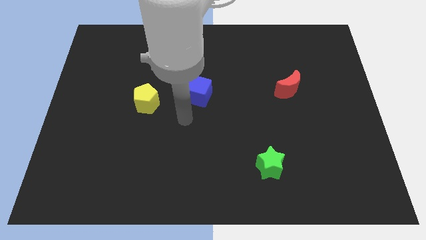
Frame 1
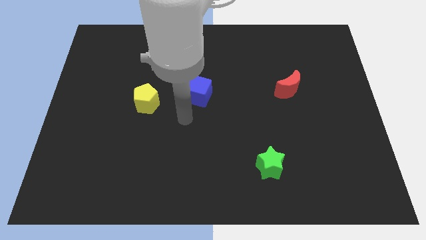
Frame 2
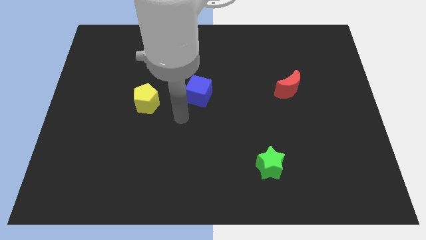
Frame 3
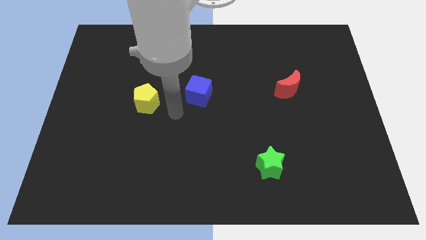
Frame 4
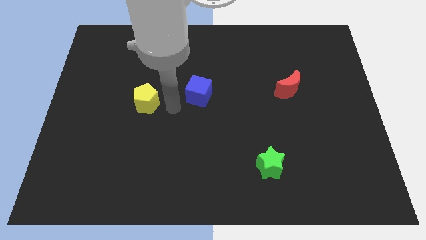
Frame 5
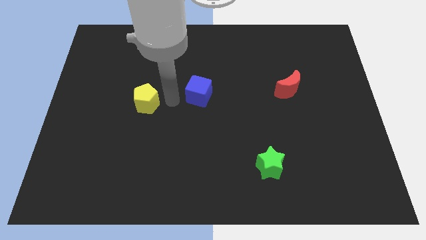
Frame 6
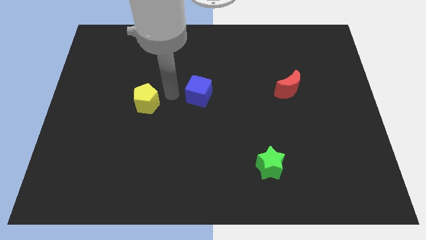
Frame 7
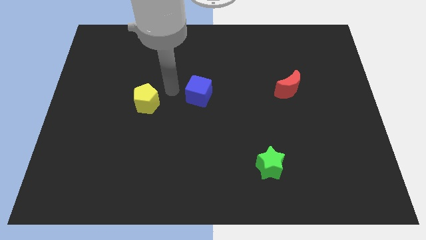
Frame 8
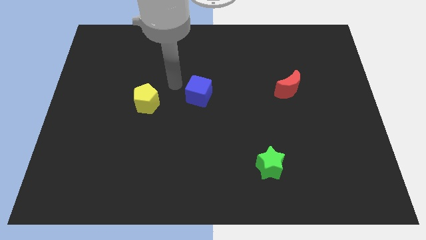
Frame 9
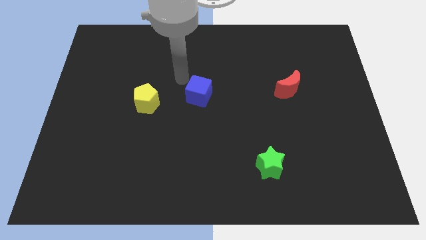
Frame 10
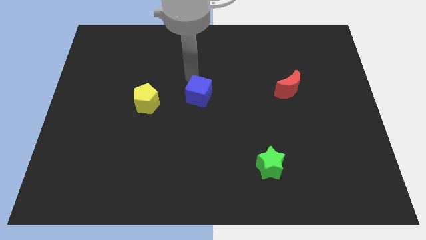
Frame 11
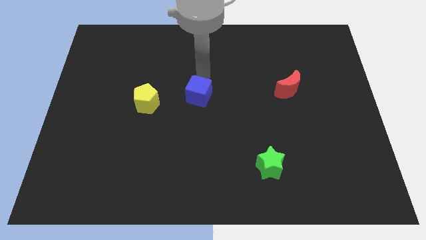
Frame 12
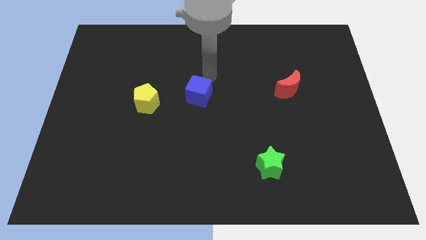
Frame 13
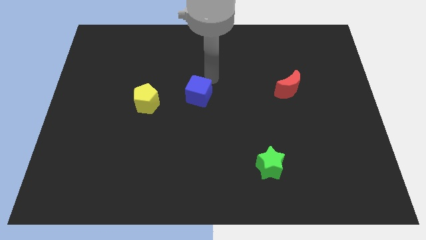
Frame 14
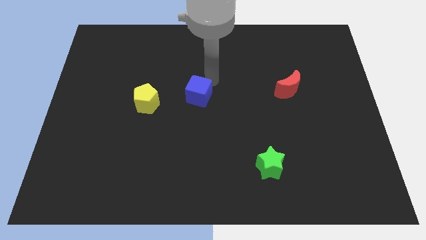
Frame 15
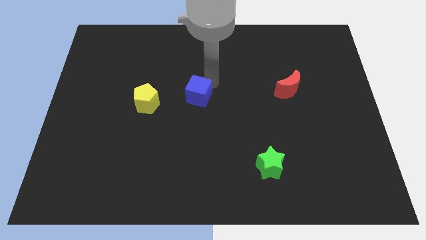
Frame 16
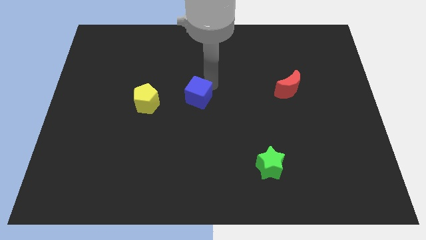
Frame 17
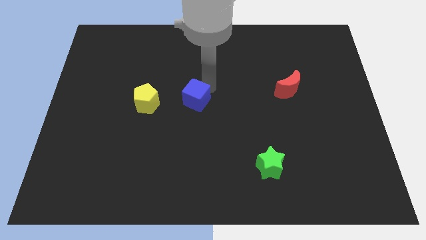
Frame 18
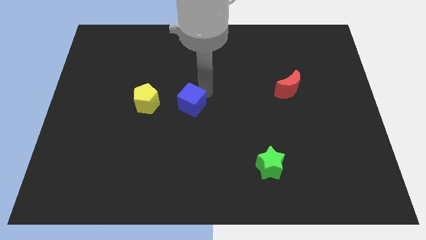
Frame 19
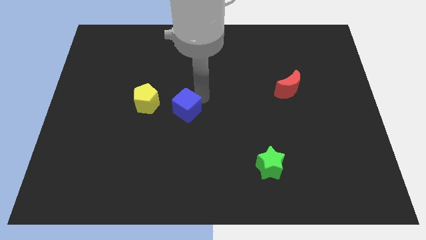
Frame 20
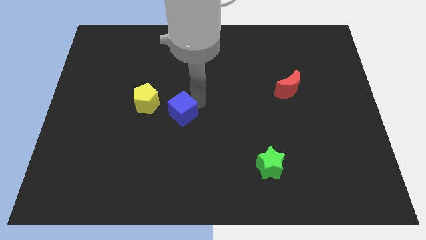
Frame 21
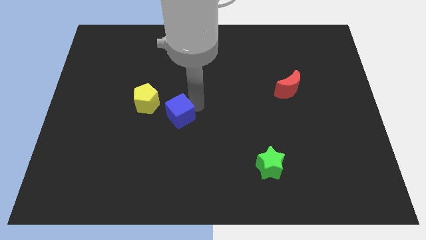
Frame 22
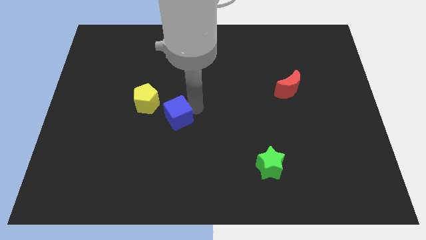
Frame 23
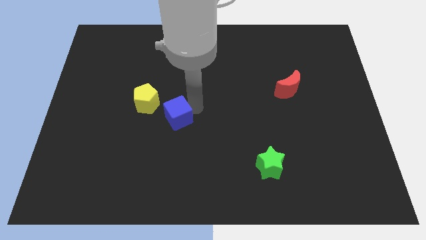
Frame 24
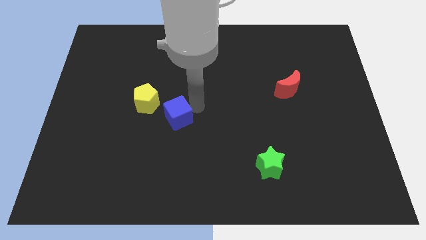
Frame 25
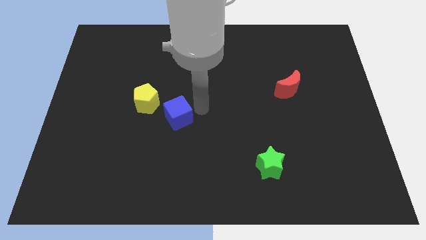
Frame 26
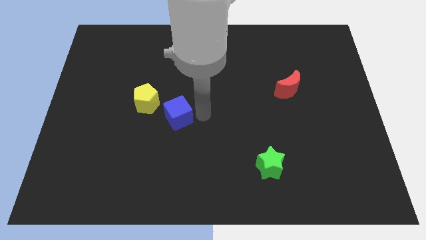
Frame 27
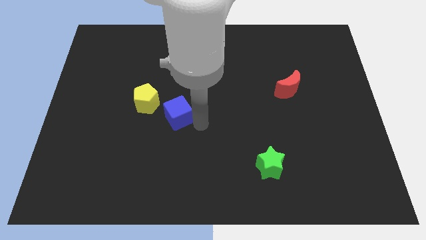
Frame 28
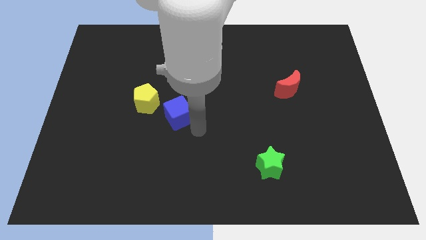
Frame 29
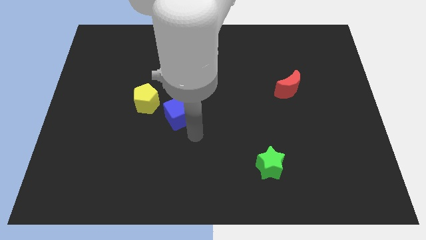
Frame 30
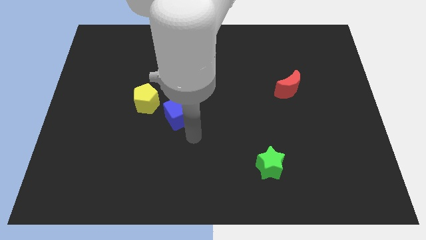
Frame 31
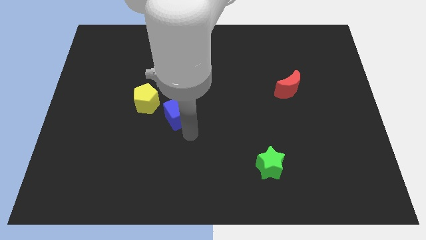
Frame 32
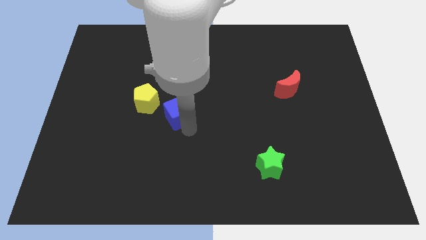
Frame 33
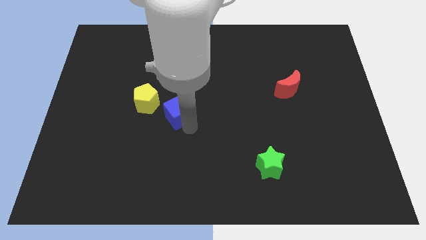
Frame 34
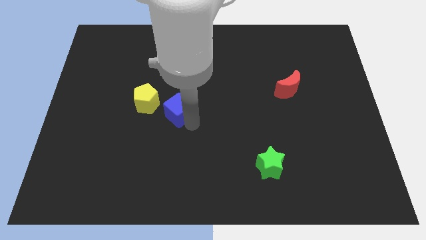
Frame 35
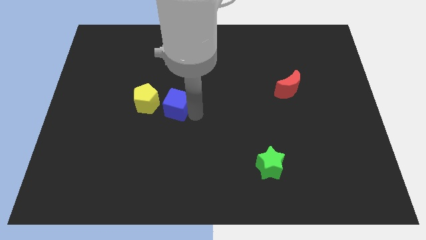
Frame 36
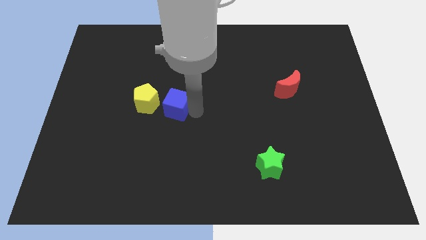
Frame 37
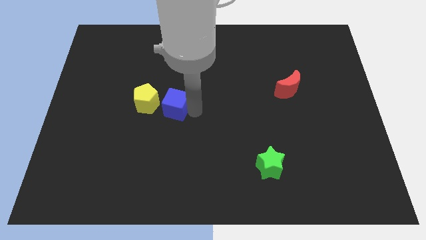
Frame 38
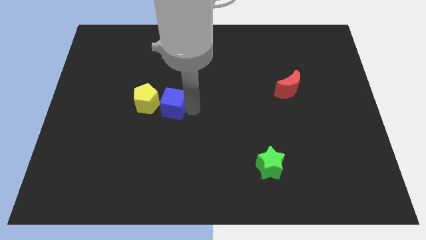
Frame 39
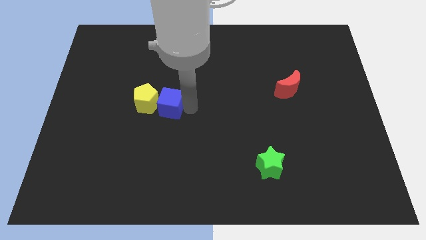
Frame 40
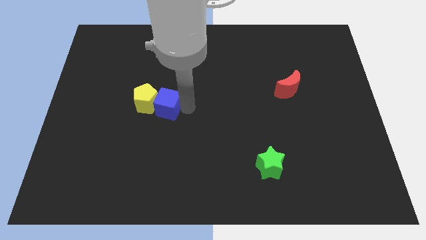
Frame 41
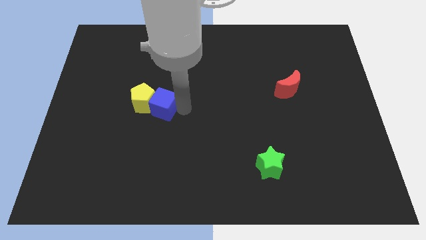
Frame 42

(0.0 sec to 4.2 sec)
put the blue block next to the yellow pentagon

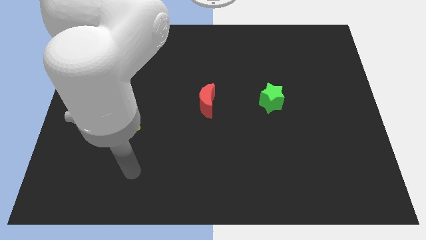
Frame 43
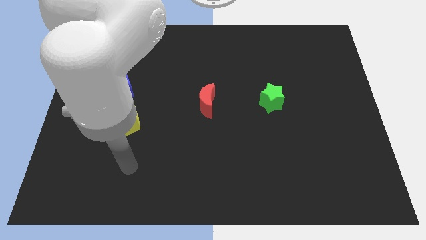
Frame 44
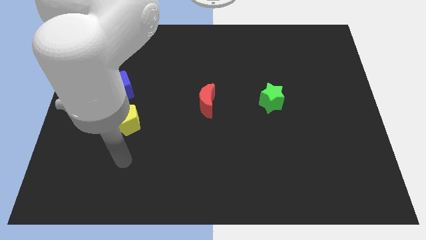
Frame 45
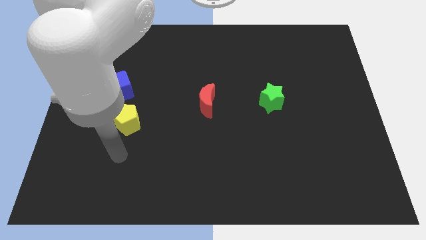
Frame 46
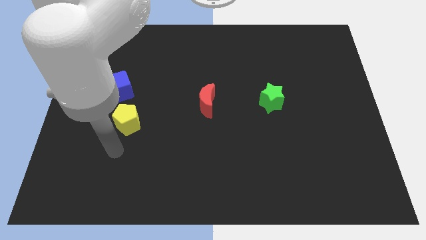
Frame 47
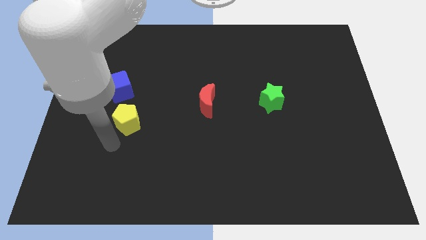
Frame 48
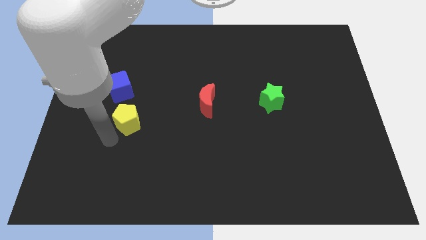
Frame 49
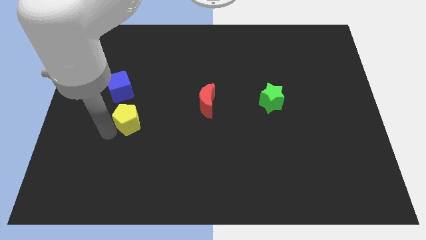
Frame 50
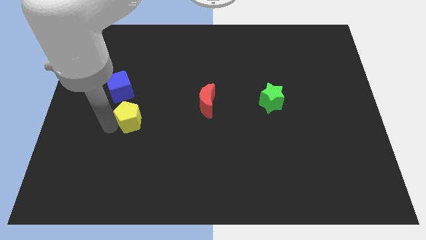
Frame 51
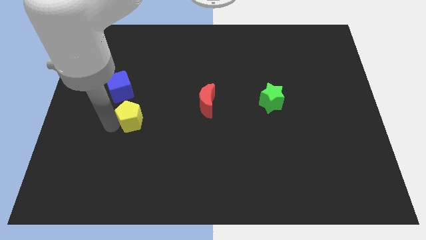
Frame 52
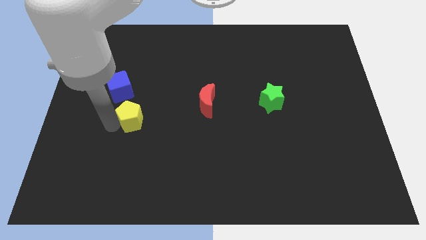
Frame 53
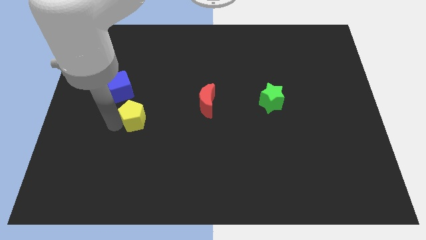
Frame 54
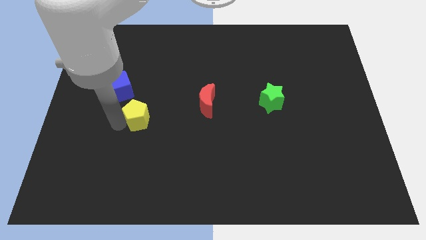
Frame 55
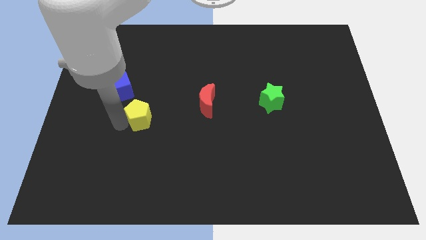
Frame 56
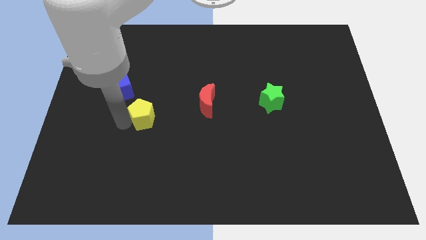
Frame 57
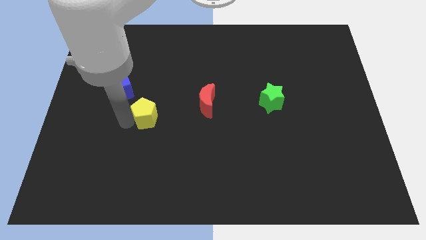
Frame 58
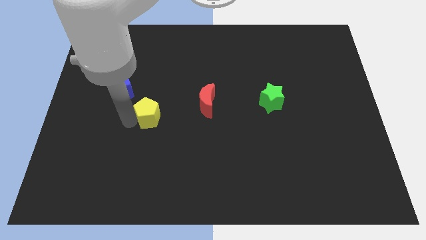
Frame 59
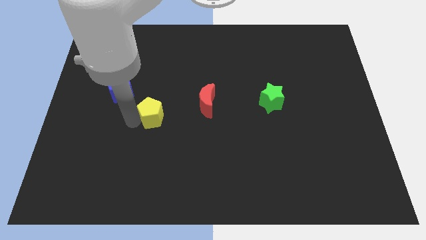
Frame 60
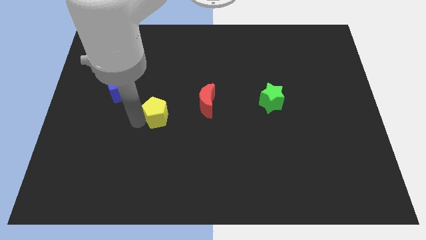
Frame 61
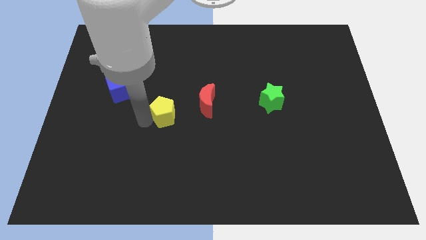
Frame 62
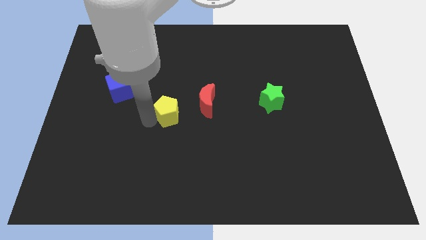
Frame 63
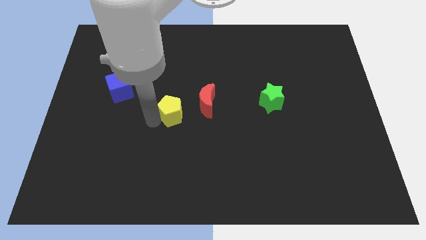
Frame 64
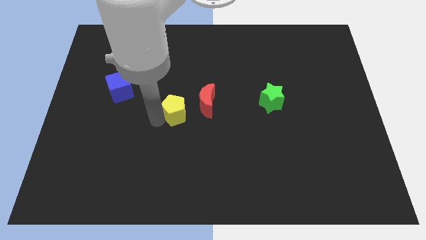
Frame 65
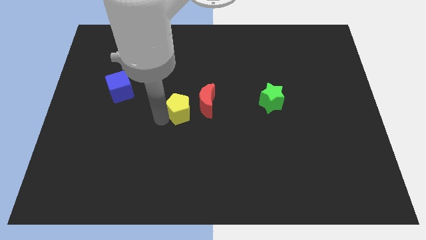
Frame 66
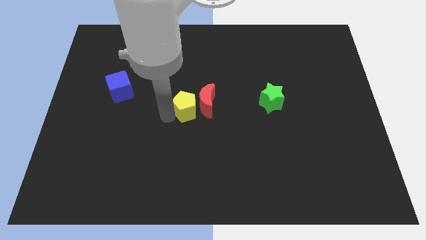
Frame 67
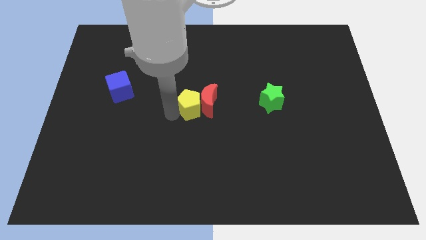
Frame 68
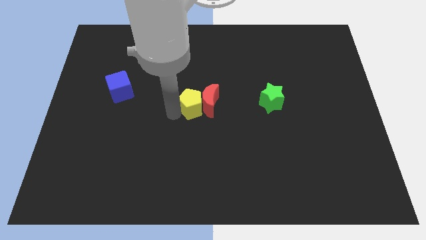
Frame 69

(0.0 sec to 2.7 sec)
put the yellow pentagon close to the red block

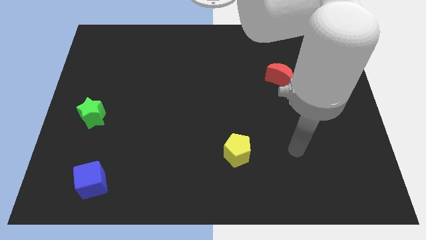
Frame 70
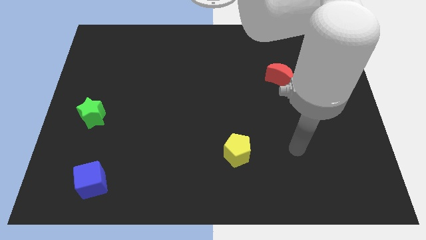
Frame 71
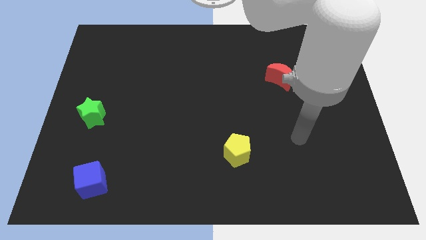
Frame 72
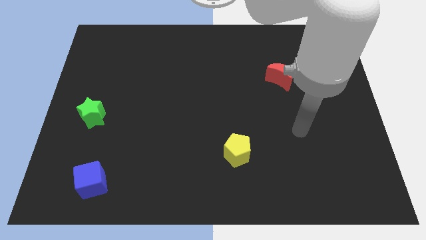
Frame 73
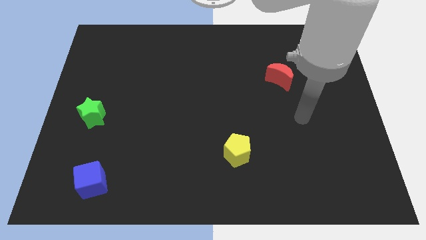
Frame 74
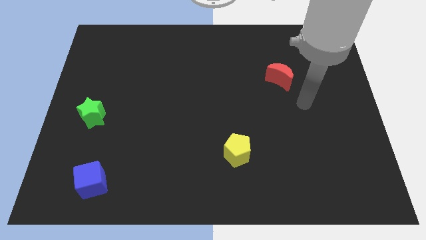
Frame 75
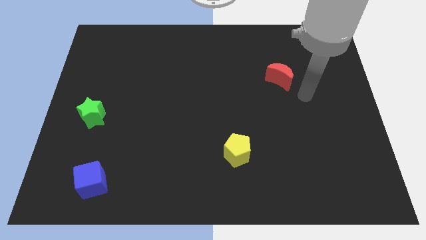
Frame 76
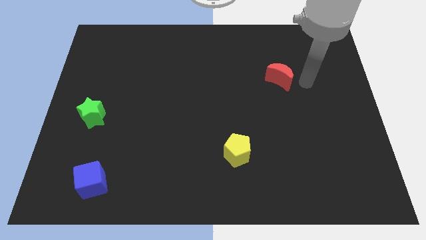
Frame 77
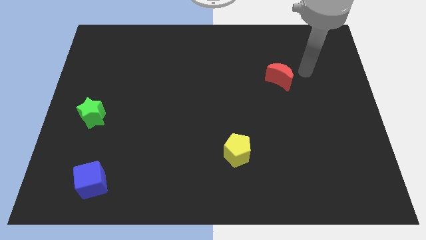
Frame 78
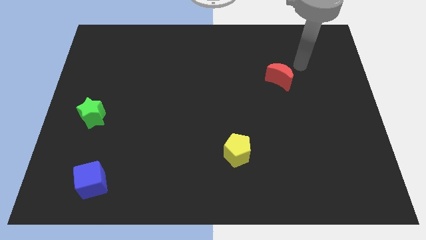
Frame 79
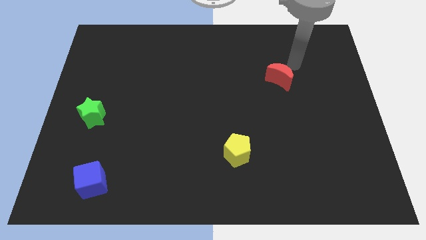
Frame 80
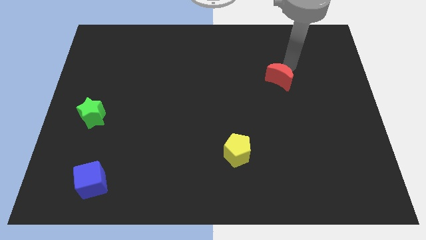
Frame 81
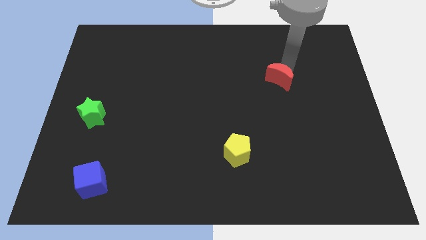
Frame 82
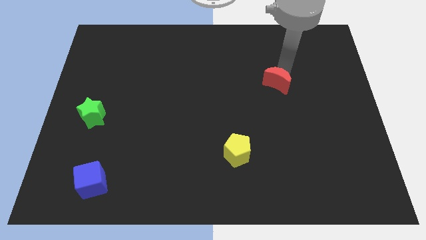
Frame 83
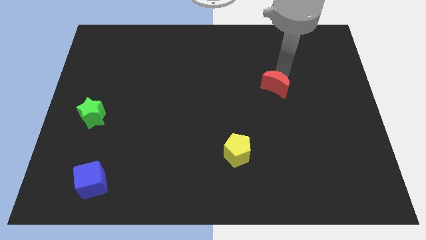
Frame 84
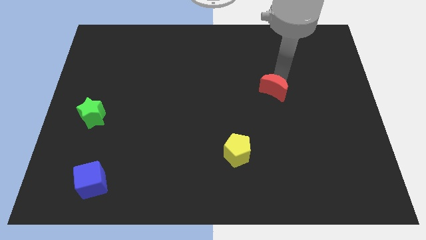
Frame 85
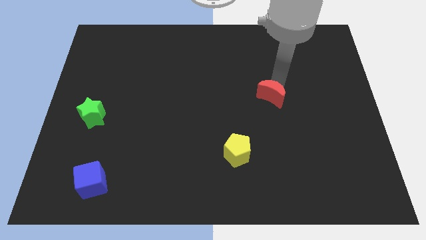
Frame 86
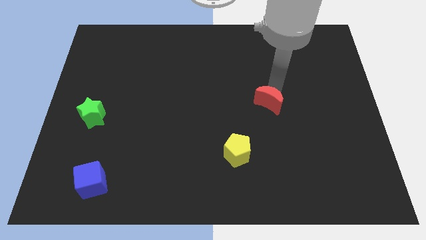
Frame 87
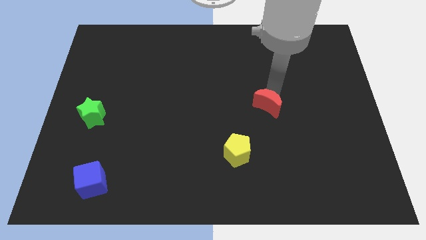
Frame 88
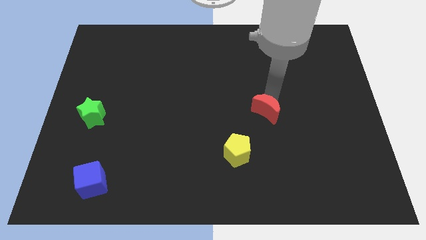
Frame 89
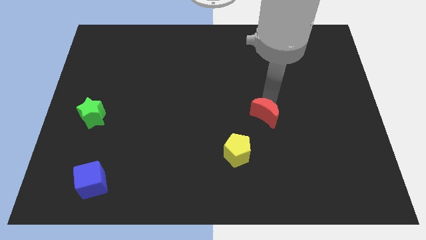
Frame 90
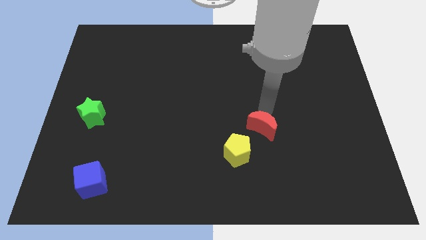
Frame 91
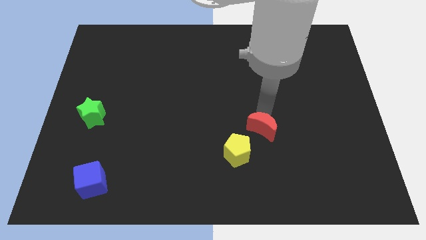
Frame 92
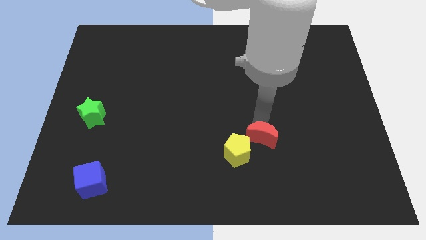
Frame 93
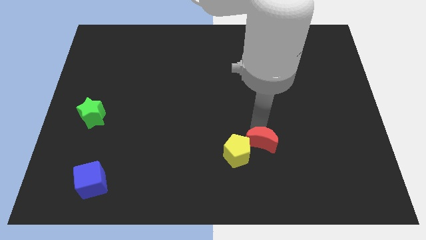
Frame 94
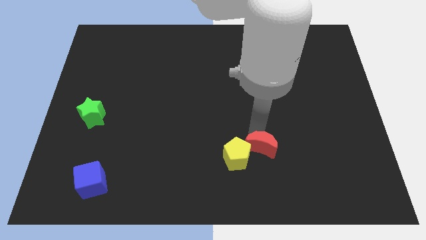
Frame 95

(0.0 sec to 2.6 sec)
put the red moon to the pentagon
